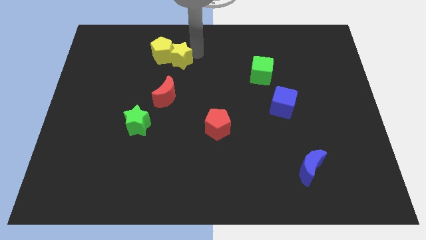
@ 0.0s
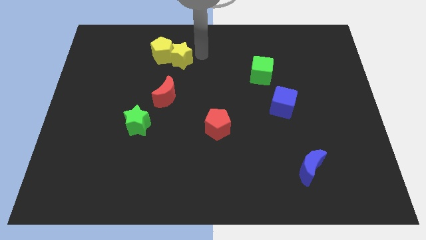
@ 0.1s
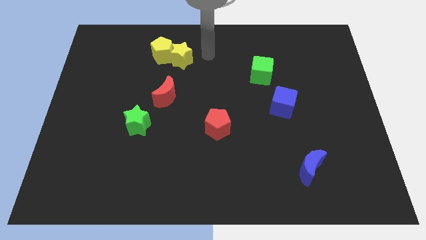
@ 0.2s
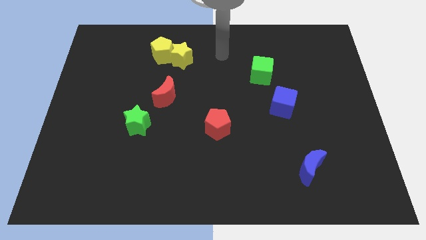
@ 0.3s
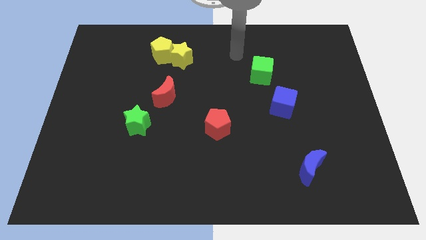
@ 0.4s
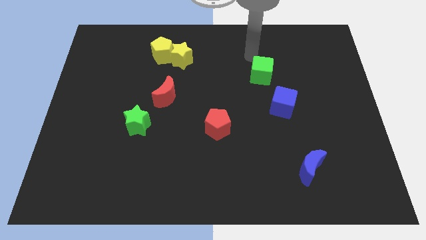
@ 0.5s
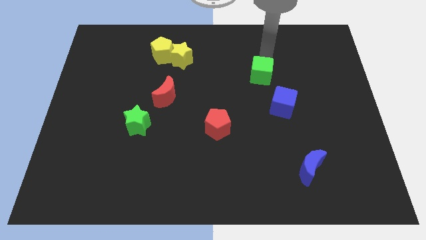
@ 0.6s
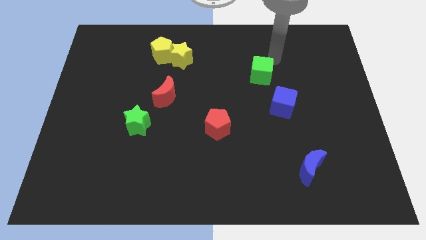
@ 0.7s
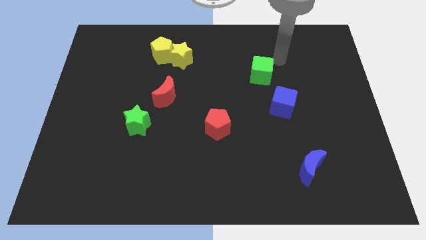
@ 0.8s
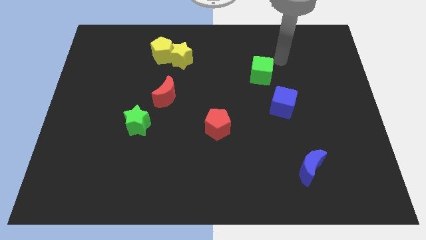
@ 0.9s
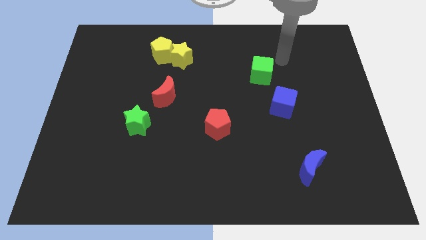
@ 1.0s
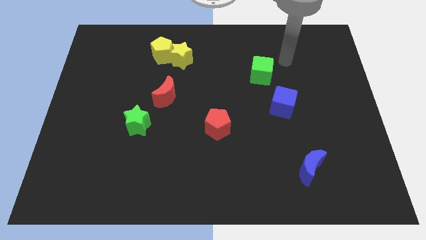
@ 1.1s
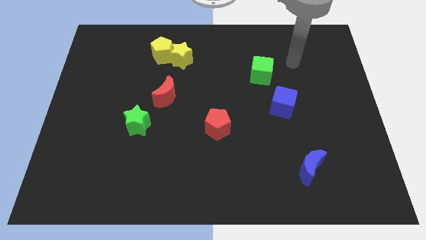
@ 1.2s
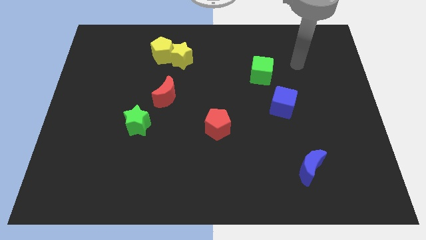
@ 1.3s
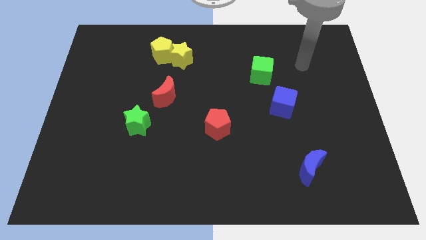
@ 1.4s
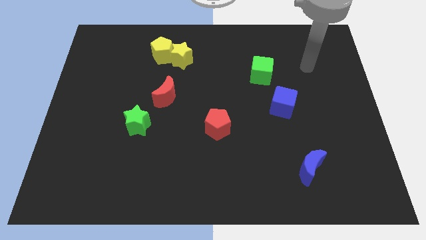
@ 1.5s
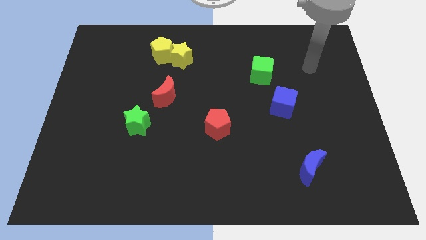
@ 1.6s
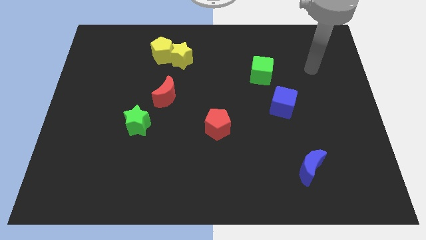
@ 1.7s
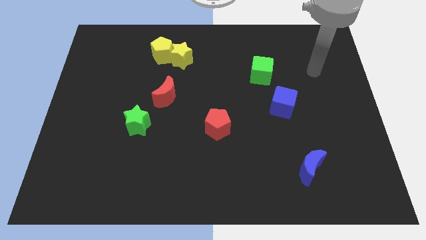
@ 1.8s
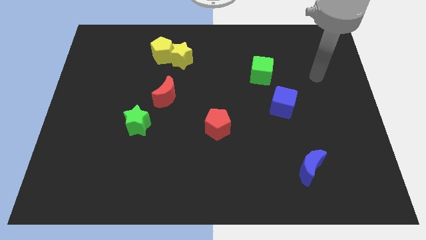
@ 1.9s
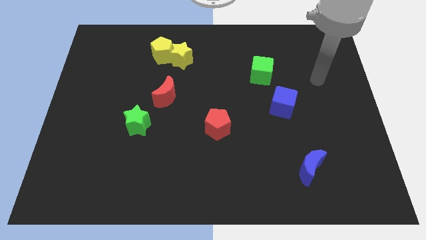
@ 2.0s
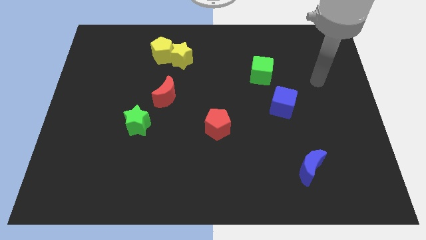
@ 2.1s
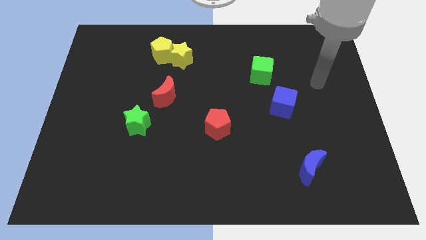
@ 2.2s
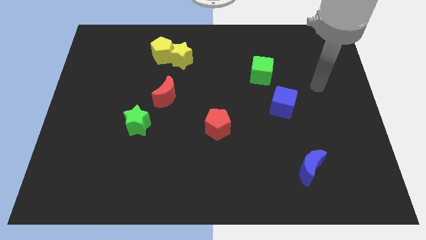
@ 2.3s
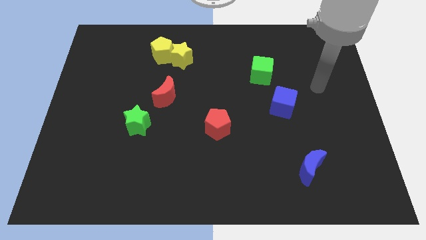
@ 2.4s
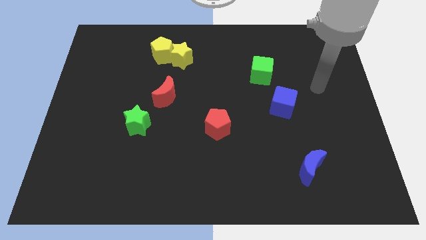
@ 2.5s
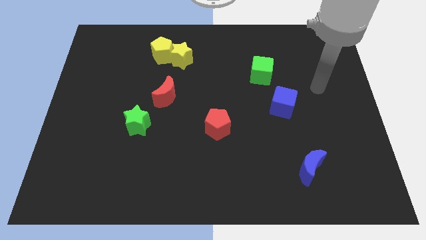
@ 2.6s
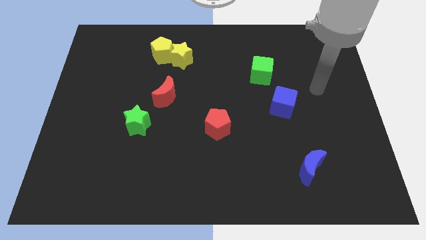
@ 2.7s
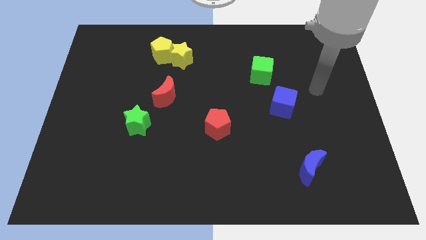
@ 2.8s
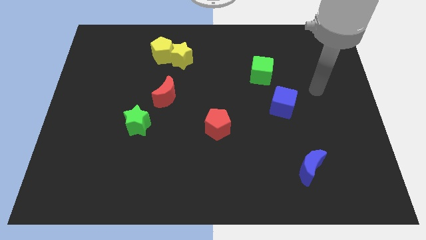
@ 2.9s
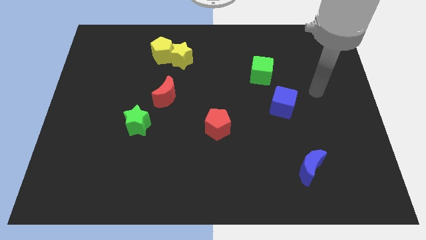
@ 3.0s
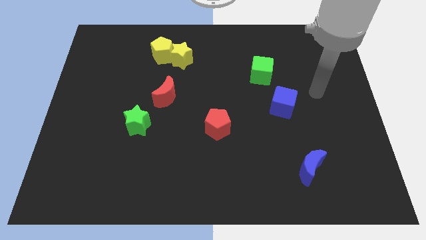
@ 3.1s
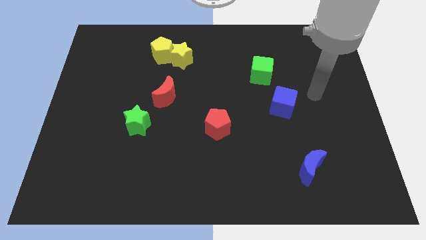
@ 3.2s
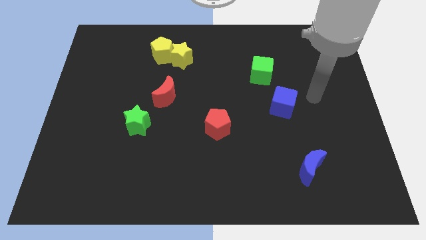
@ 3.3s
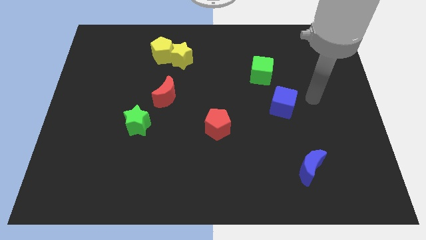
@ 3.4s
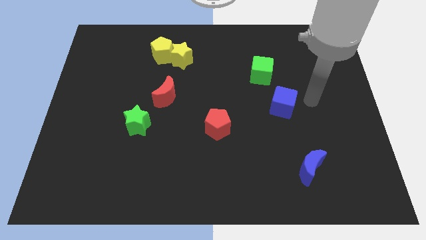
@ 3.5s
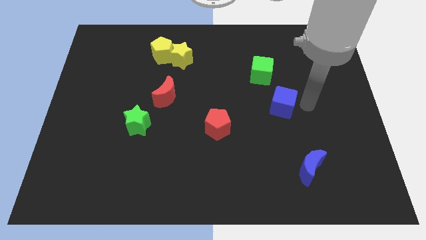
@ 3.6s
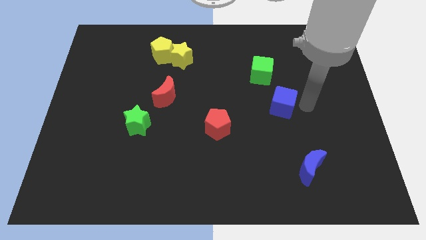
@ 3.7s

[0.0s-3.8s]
move the arm to the right side of the blue cube

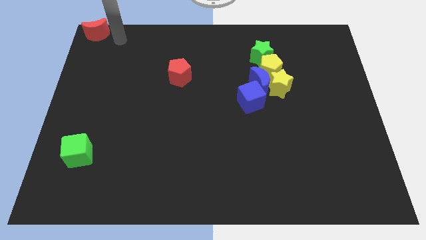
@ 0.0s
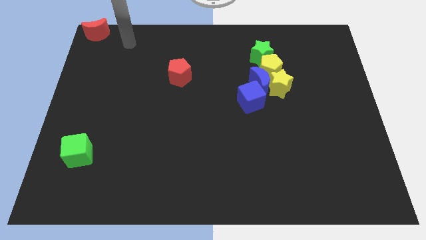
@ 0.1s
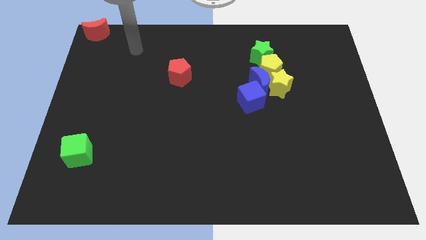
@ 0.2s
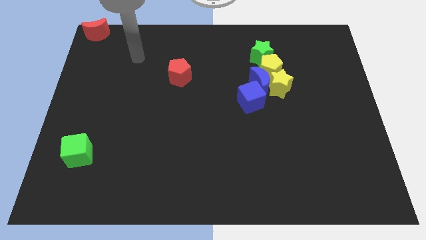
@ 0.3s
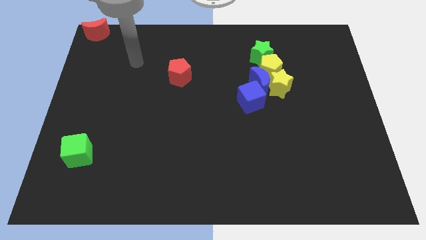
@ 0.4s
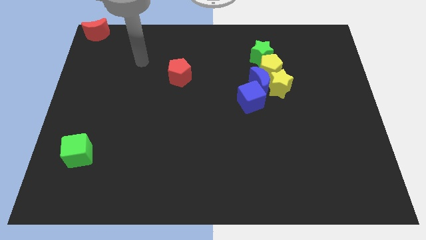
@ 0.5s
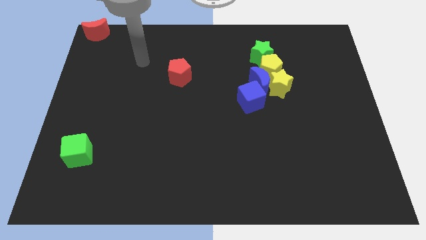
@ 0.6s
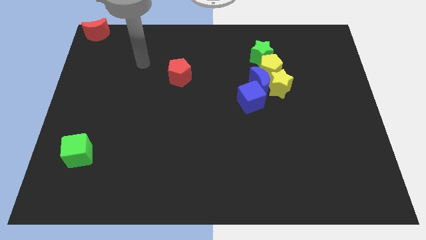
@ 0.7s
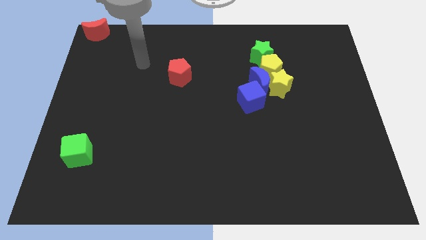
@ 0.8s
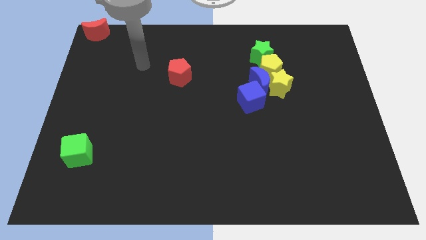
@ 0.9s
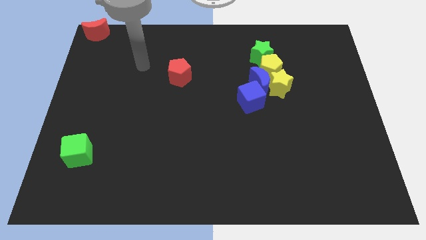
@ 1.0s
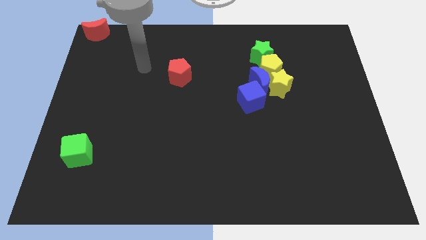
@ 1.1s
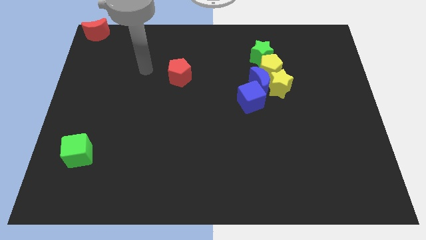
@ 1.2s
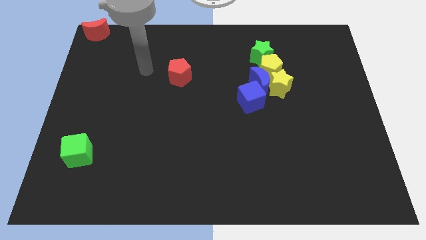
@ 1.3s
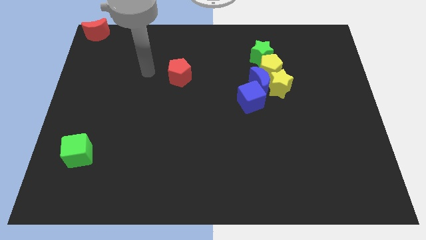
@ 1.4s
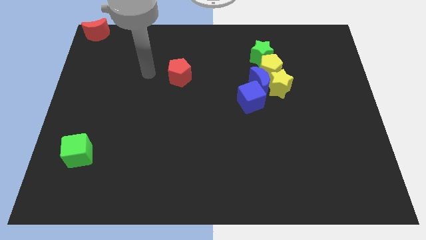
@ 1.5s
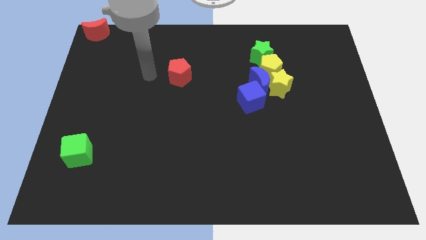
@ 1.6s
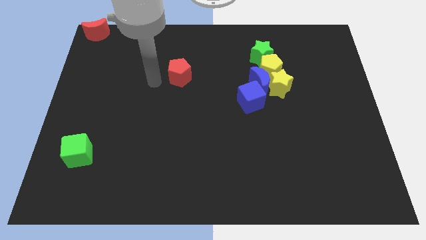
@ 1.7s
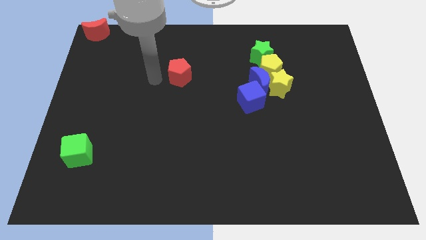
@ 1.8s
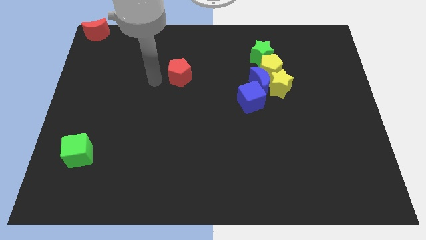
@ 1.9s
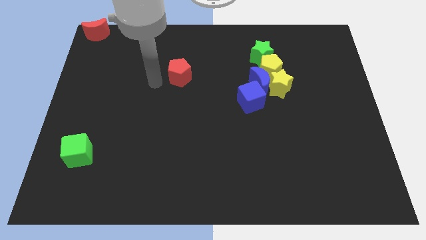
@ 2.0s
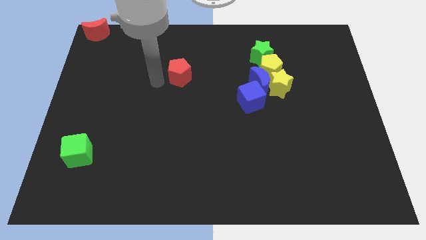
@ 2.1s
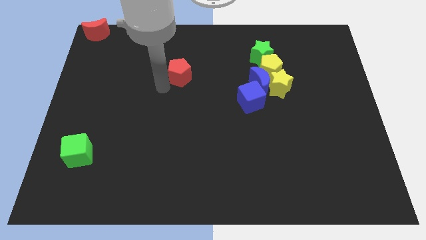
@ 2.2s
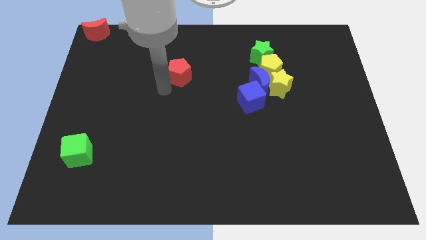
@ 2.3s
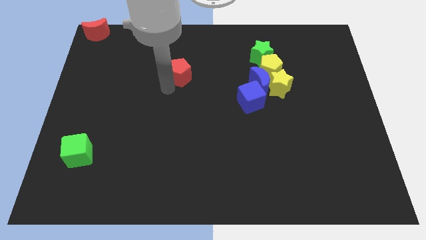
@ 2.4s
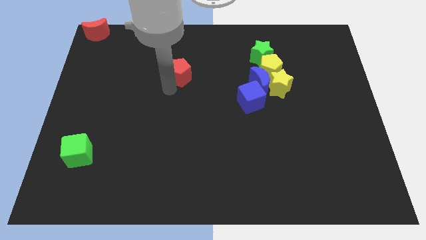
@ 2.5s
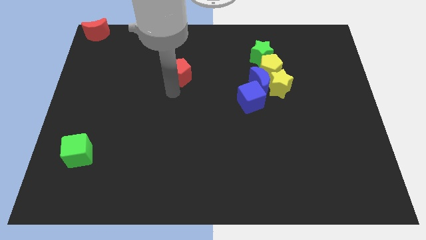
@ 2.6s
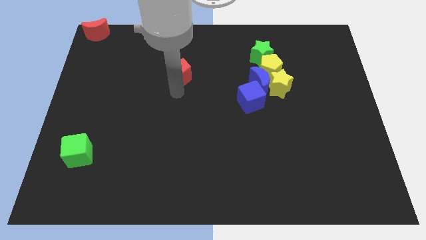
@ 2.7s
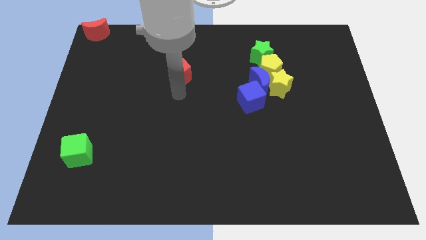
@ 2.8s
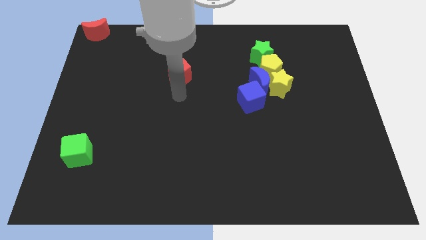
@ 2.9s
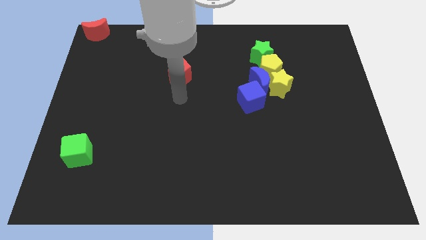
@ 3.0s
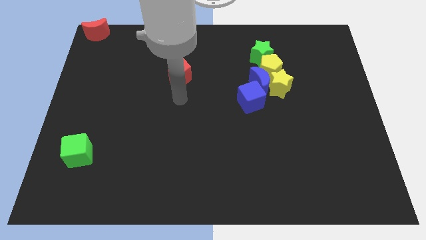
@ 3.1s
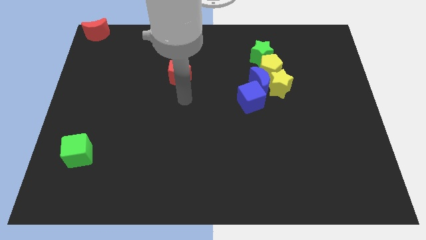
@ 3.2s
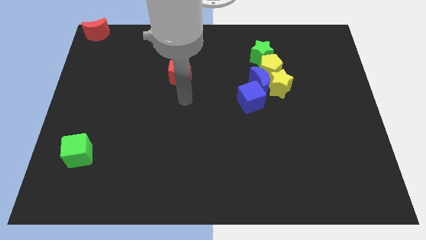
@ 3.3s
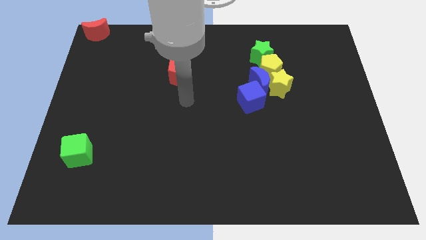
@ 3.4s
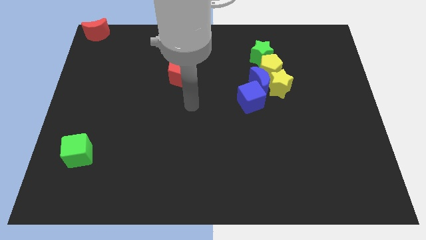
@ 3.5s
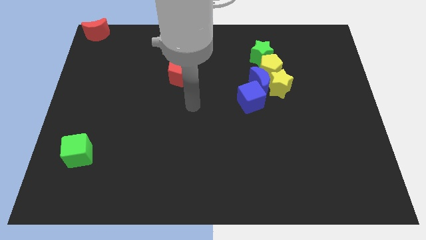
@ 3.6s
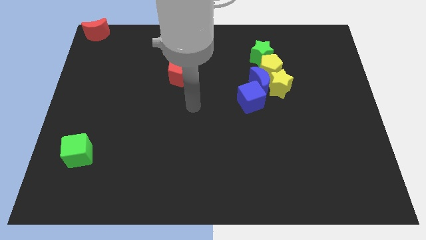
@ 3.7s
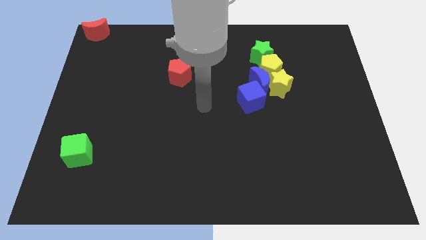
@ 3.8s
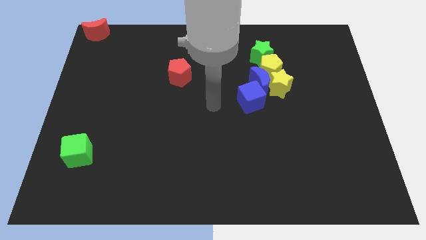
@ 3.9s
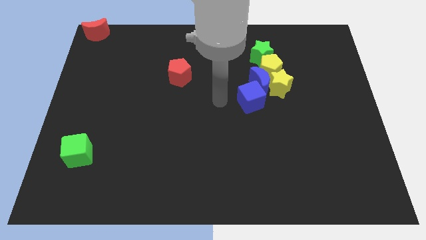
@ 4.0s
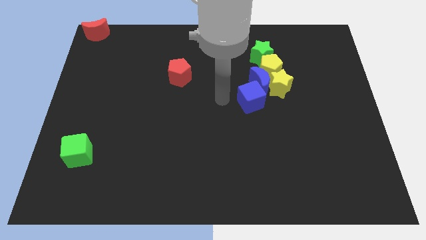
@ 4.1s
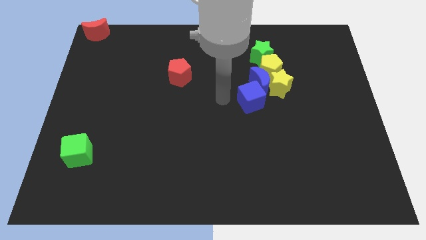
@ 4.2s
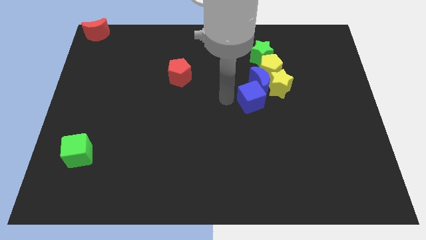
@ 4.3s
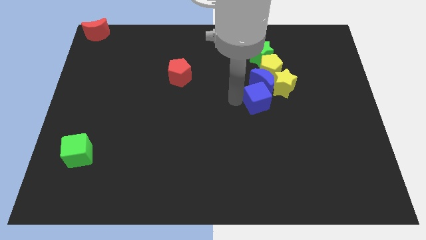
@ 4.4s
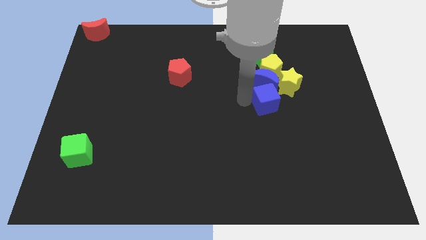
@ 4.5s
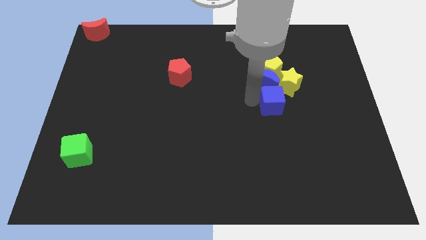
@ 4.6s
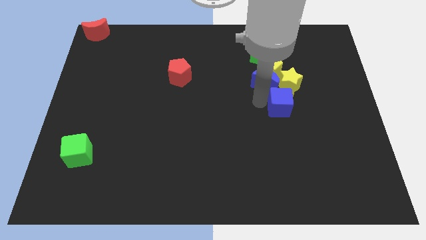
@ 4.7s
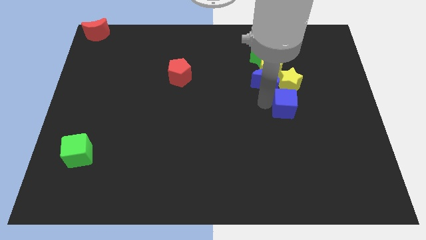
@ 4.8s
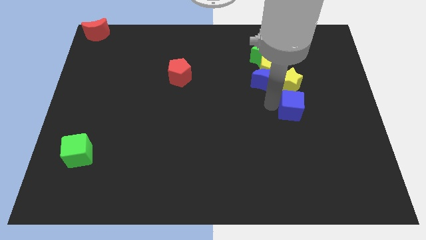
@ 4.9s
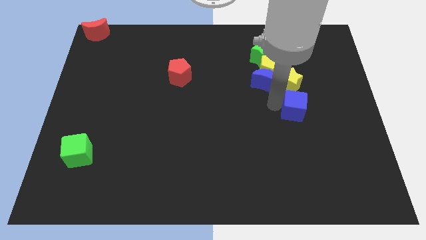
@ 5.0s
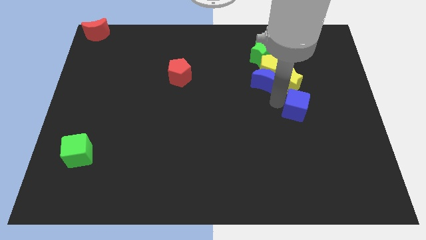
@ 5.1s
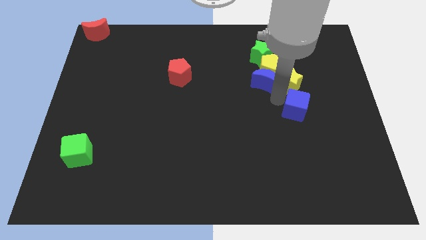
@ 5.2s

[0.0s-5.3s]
put the blue cube below the yellow star
